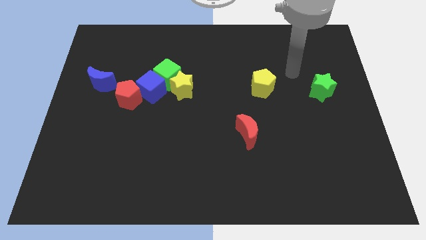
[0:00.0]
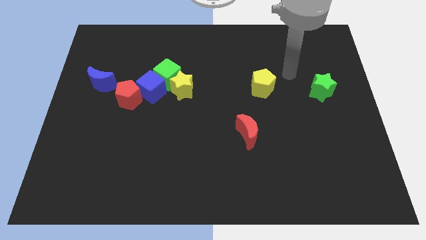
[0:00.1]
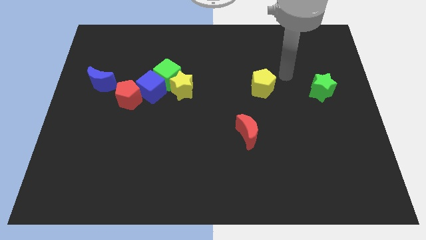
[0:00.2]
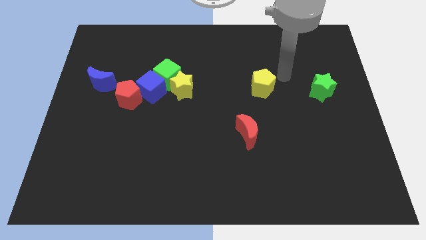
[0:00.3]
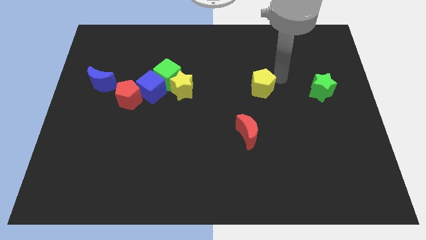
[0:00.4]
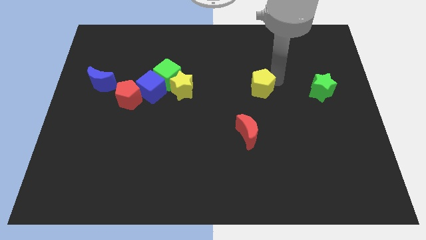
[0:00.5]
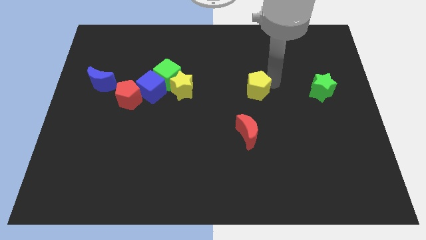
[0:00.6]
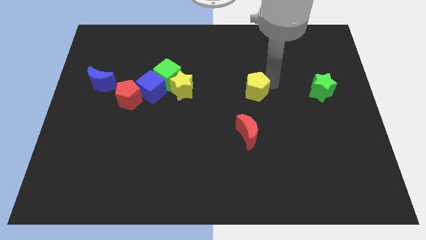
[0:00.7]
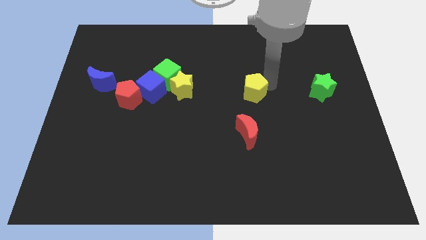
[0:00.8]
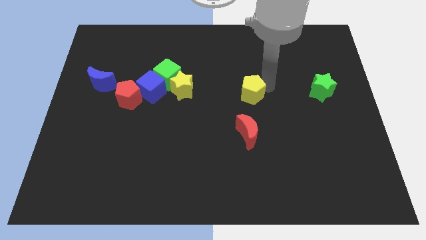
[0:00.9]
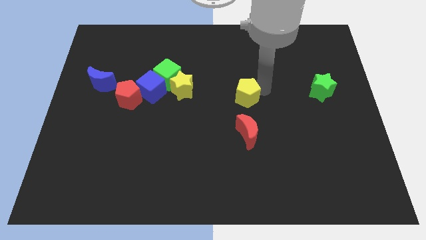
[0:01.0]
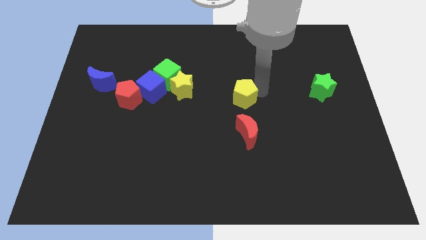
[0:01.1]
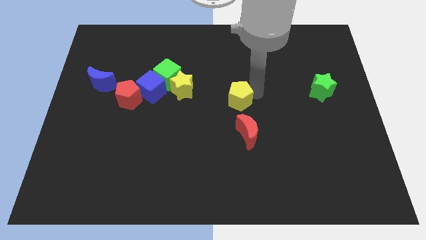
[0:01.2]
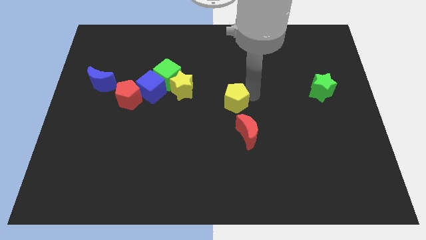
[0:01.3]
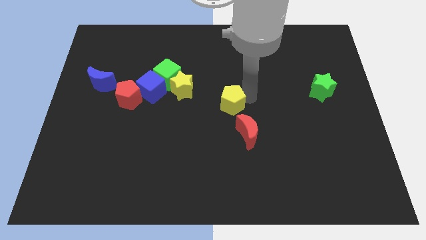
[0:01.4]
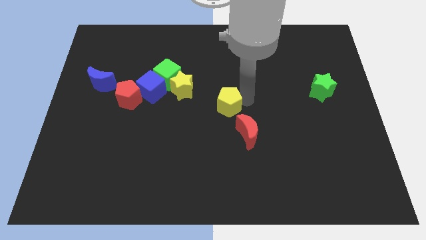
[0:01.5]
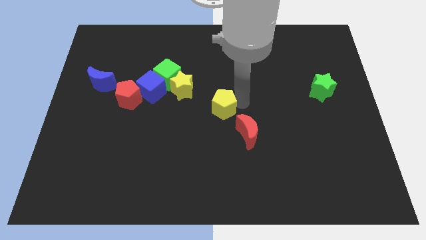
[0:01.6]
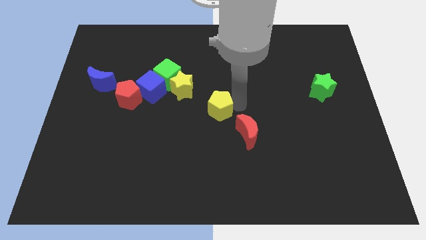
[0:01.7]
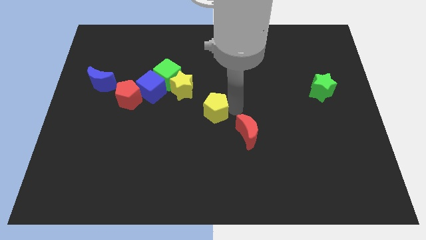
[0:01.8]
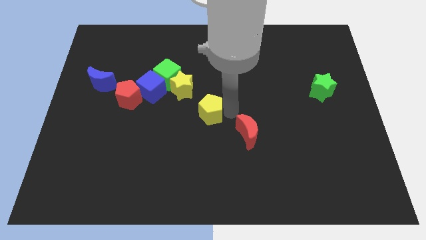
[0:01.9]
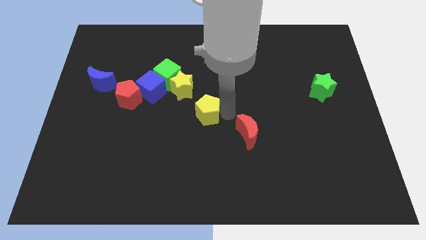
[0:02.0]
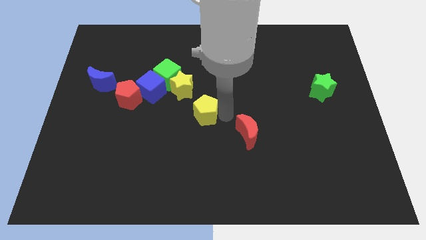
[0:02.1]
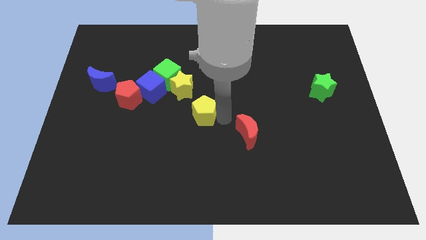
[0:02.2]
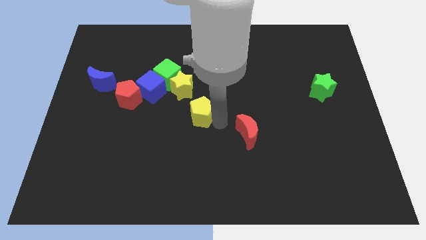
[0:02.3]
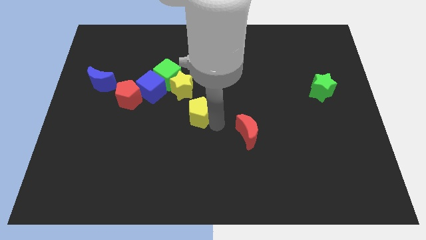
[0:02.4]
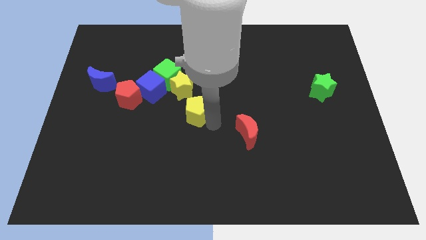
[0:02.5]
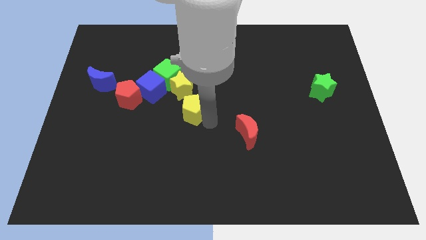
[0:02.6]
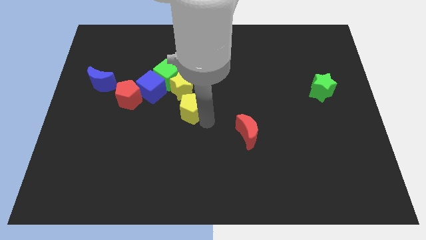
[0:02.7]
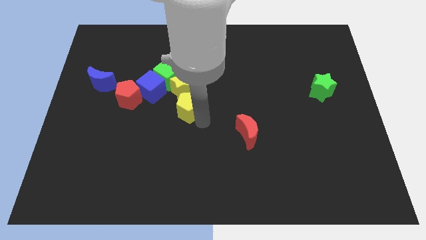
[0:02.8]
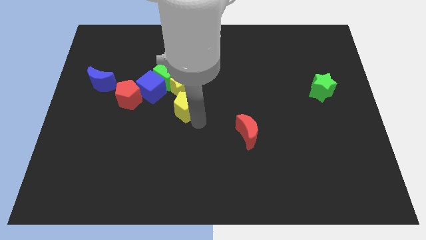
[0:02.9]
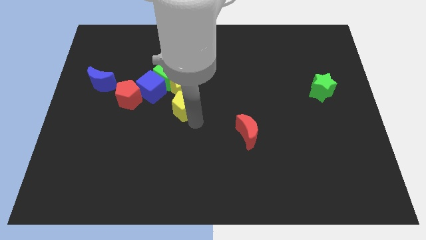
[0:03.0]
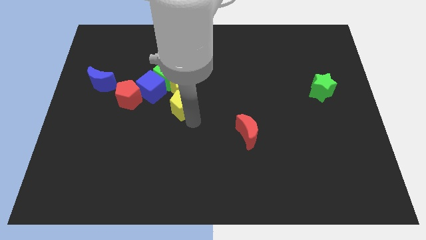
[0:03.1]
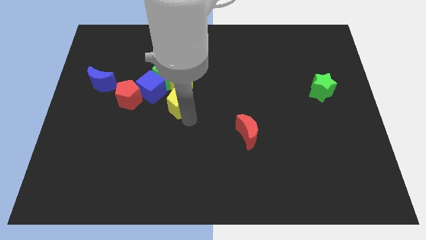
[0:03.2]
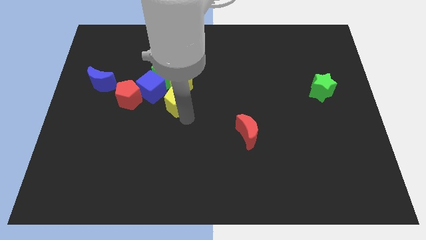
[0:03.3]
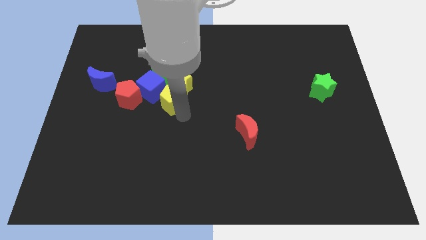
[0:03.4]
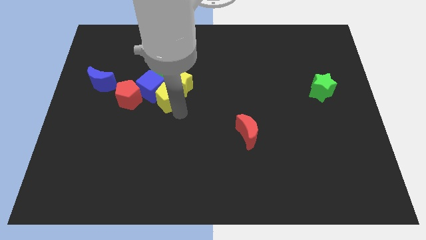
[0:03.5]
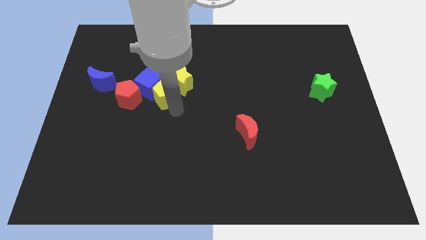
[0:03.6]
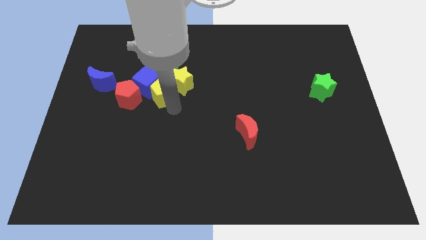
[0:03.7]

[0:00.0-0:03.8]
slide the yellow pentagon to the blue cube

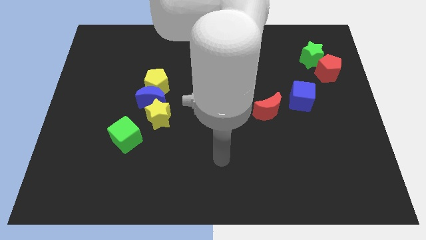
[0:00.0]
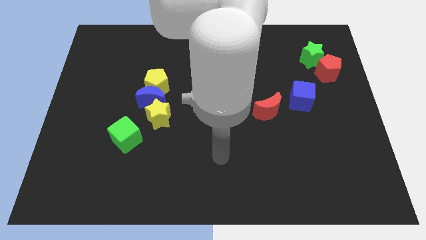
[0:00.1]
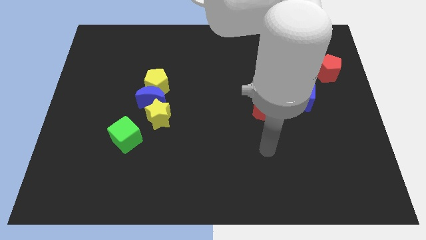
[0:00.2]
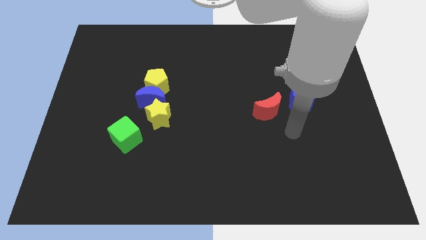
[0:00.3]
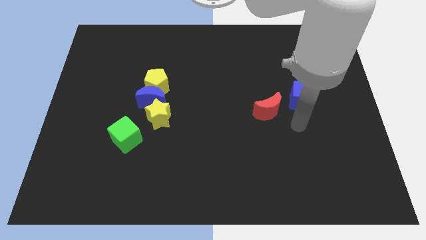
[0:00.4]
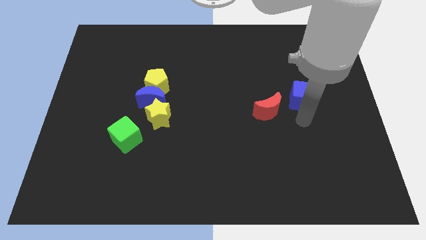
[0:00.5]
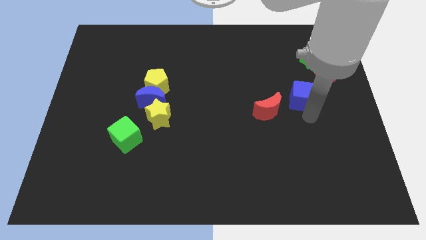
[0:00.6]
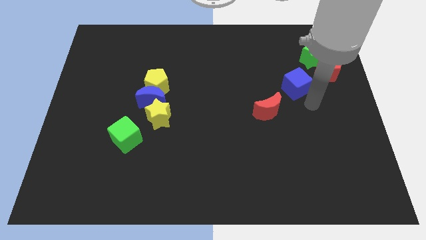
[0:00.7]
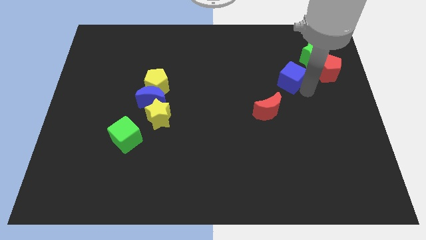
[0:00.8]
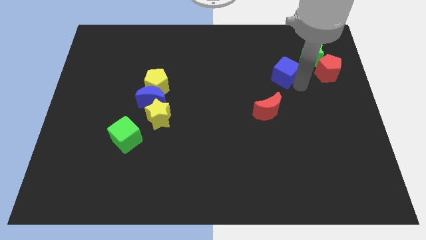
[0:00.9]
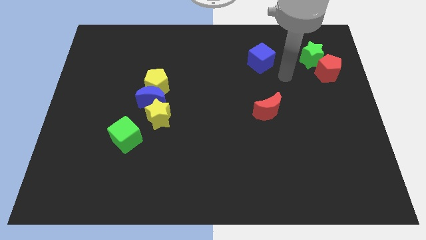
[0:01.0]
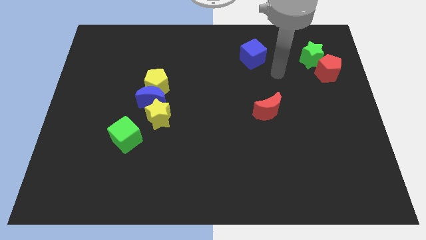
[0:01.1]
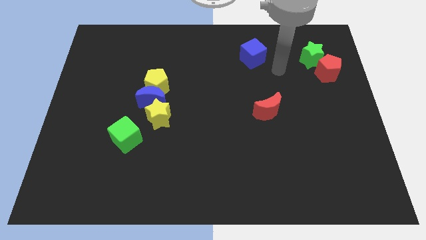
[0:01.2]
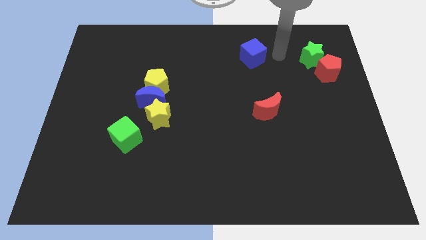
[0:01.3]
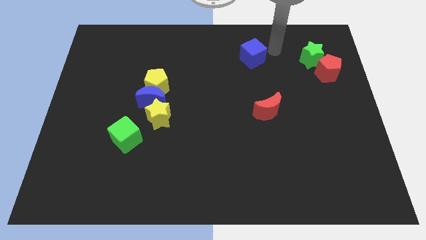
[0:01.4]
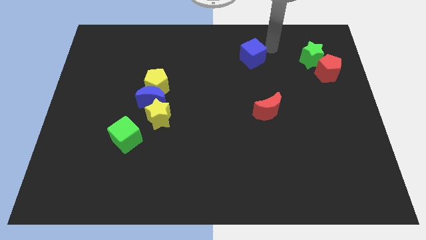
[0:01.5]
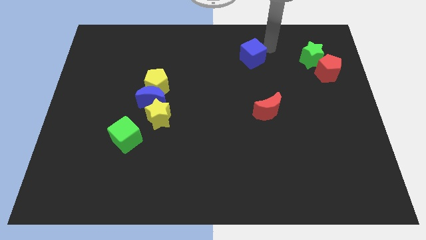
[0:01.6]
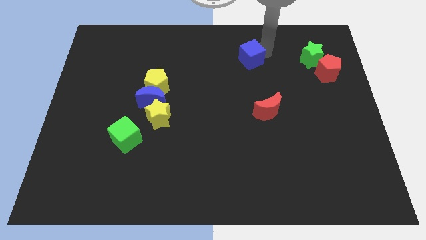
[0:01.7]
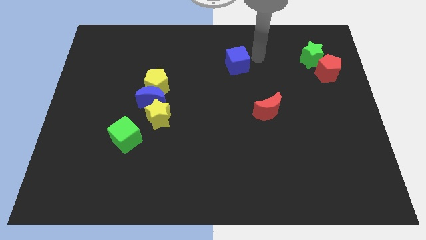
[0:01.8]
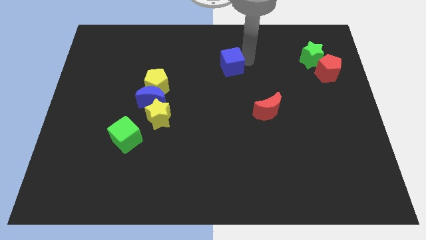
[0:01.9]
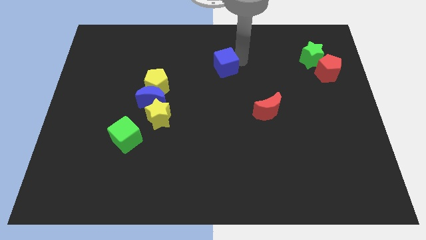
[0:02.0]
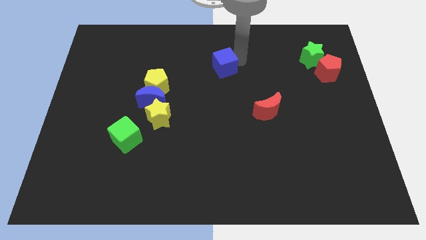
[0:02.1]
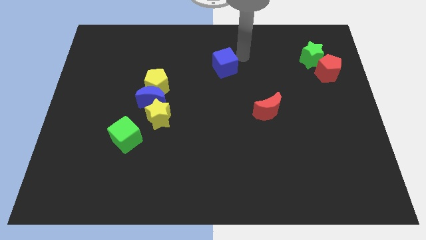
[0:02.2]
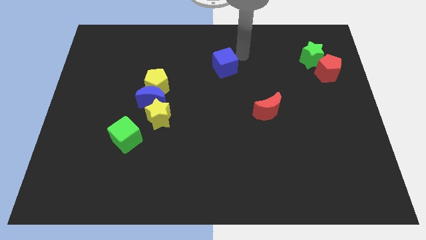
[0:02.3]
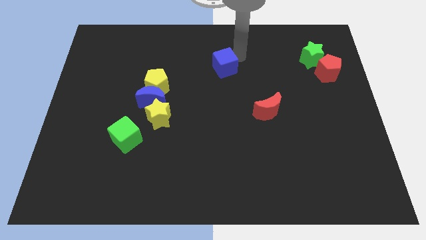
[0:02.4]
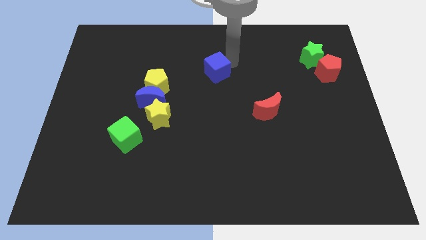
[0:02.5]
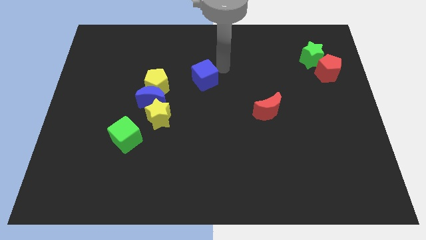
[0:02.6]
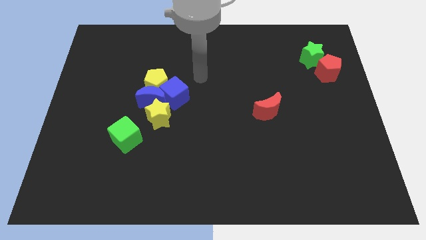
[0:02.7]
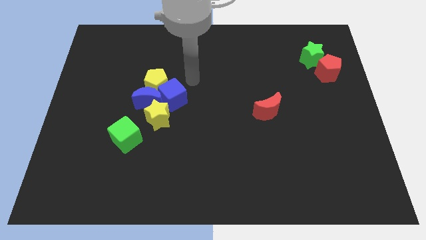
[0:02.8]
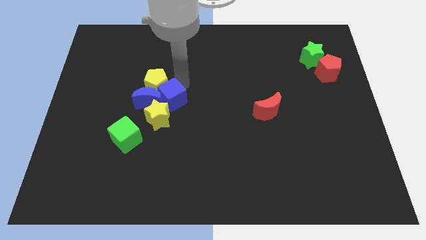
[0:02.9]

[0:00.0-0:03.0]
push the blue cube to the blue moon

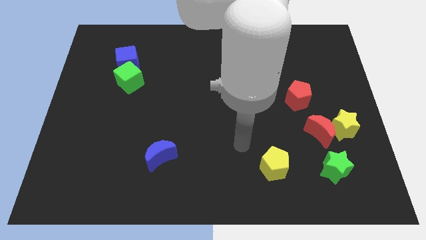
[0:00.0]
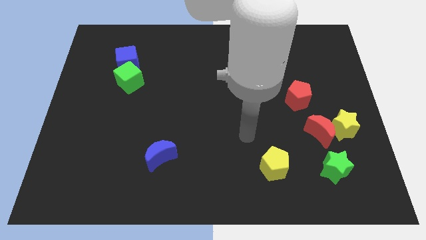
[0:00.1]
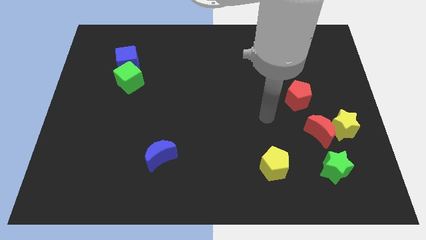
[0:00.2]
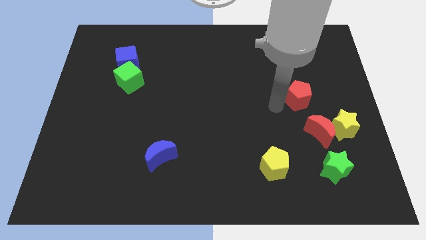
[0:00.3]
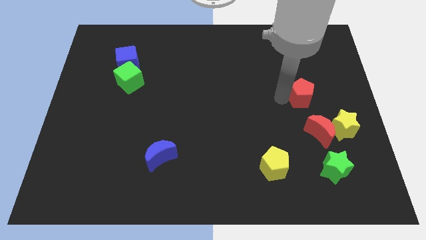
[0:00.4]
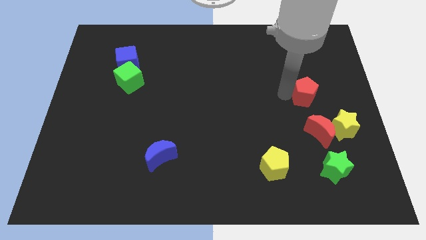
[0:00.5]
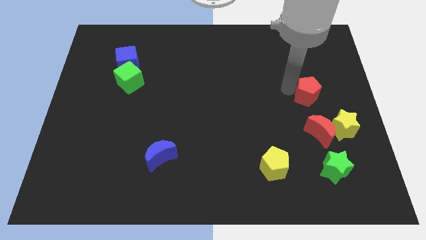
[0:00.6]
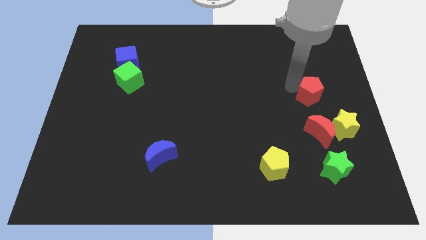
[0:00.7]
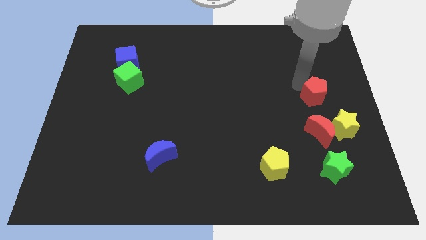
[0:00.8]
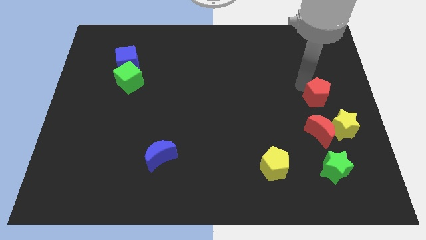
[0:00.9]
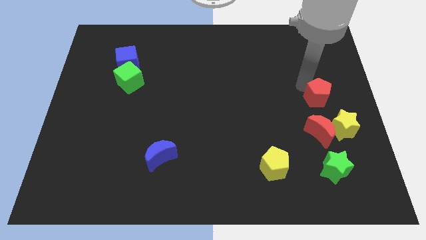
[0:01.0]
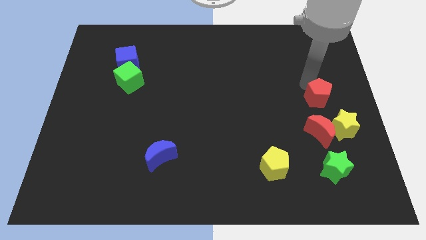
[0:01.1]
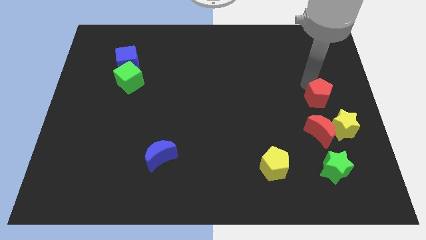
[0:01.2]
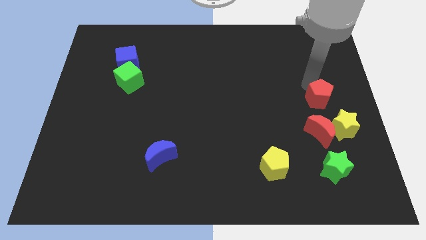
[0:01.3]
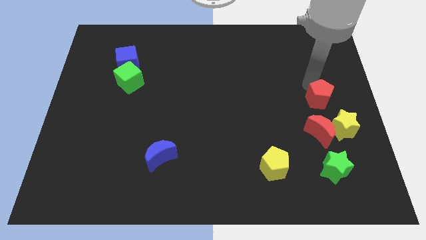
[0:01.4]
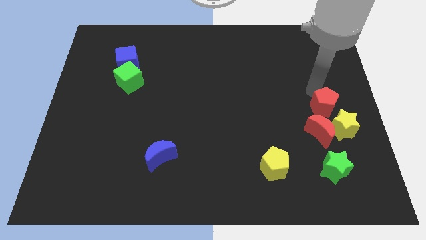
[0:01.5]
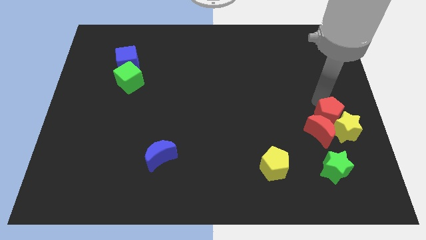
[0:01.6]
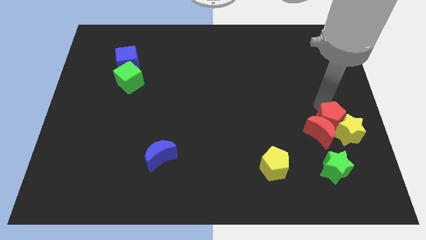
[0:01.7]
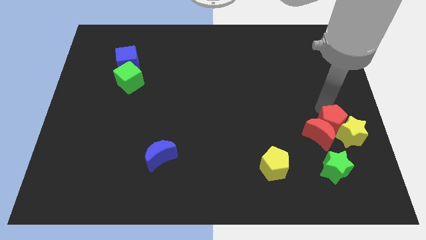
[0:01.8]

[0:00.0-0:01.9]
put the red pentagon towards the yellow star

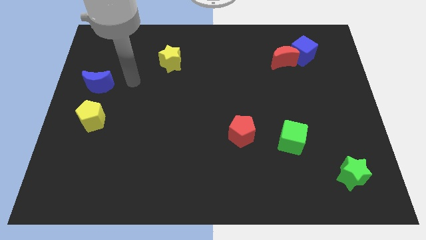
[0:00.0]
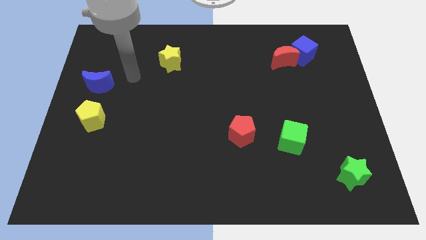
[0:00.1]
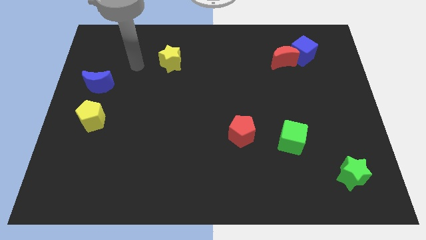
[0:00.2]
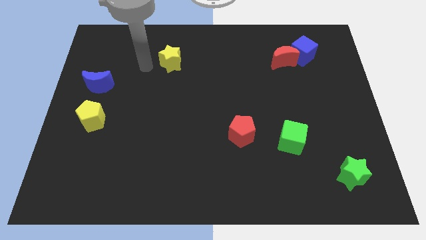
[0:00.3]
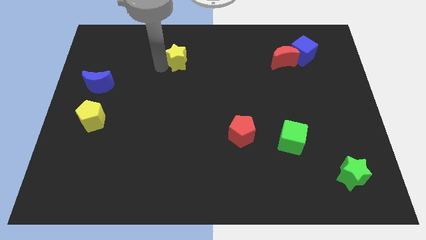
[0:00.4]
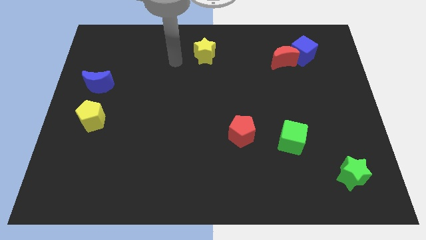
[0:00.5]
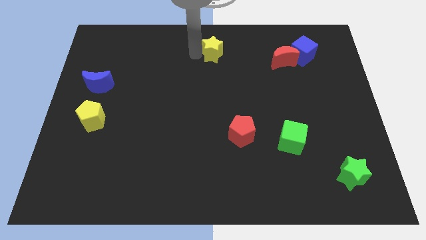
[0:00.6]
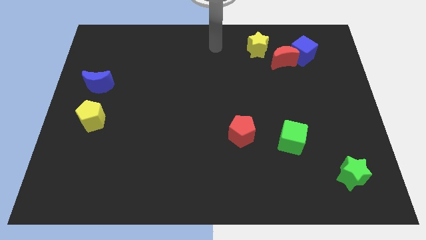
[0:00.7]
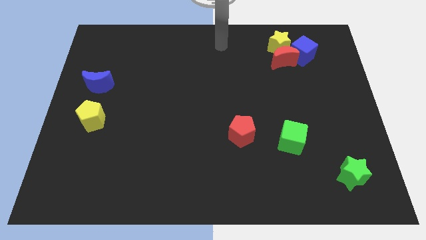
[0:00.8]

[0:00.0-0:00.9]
move the yellow star to the red moon
